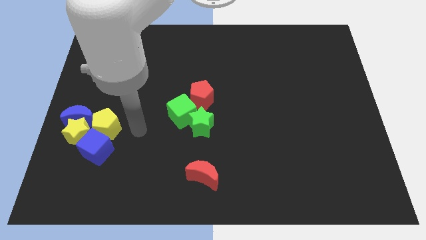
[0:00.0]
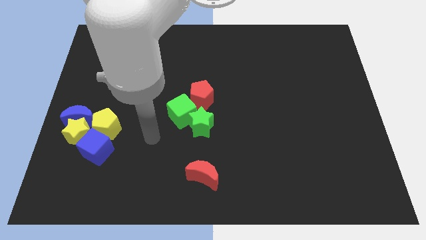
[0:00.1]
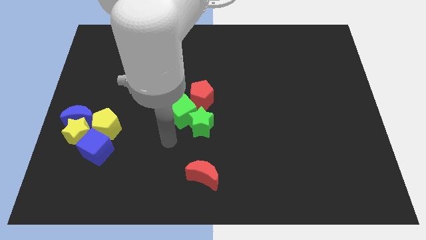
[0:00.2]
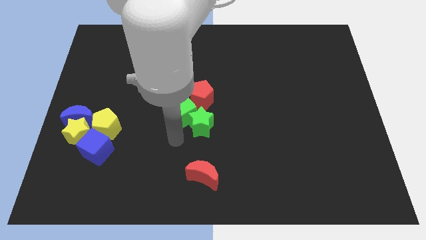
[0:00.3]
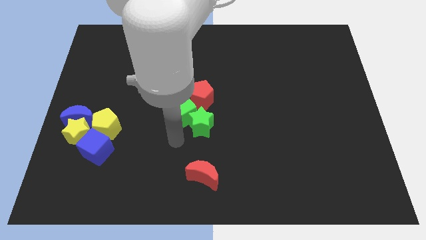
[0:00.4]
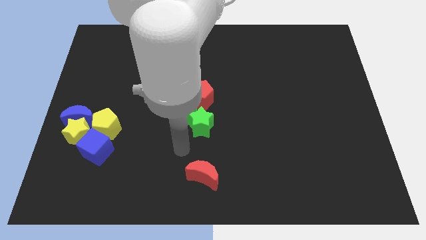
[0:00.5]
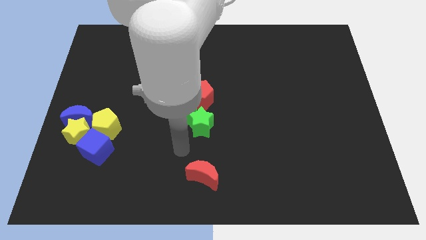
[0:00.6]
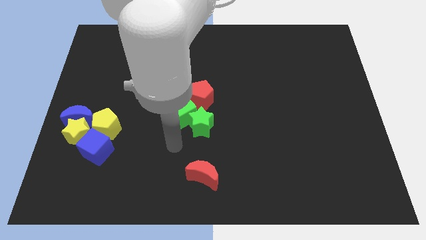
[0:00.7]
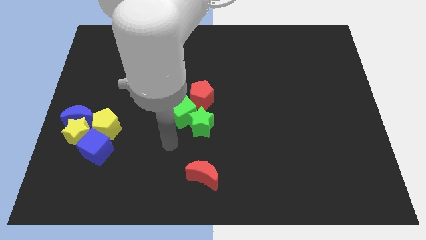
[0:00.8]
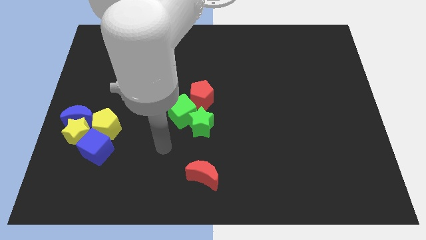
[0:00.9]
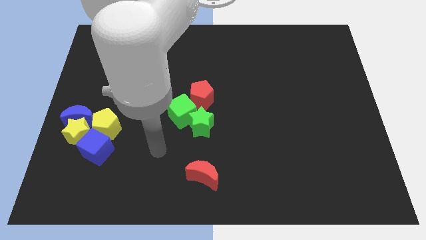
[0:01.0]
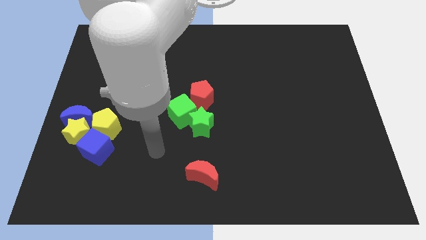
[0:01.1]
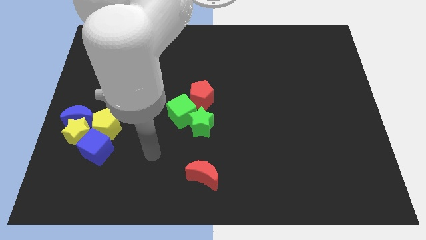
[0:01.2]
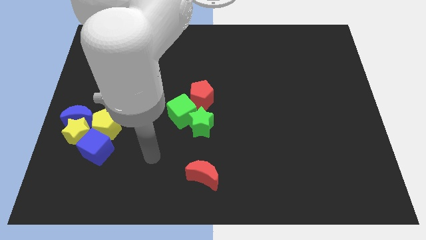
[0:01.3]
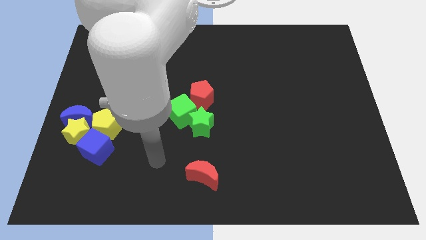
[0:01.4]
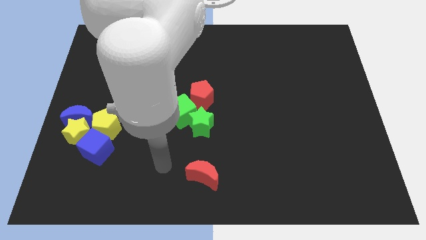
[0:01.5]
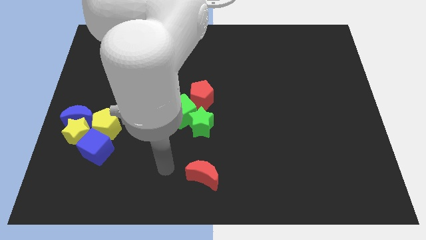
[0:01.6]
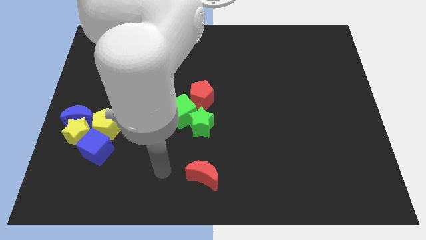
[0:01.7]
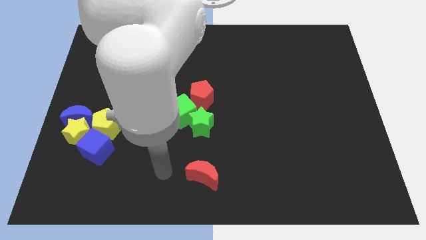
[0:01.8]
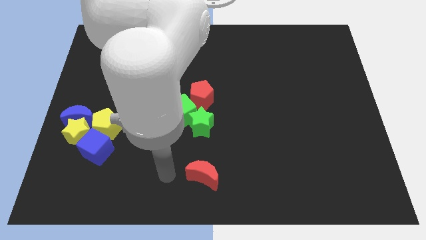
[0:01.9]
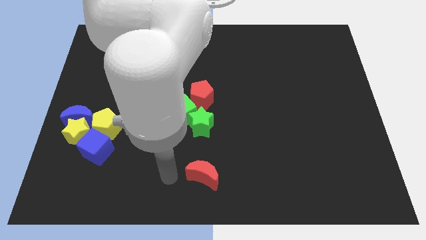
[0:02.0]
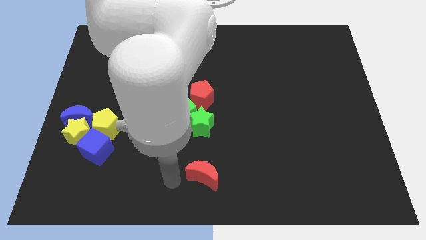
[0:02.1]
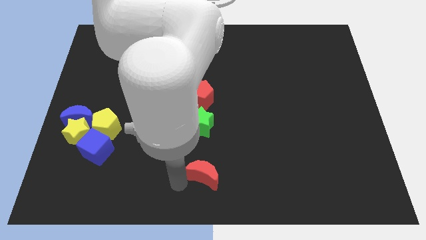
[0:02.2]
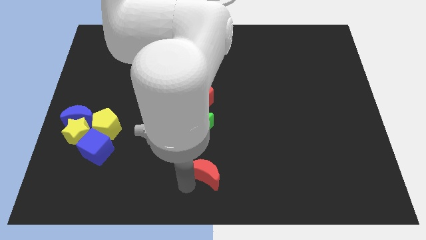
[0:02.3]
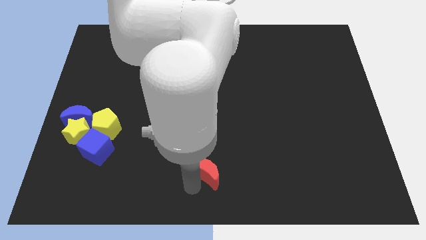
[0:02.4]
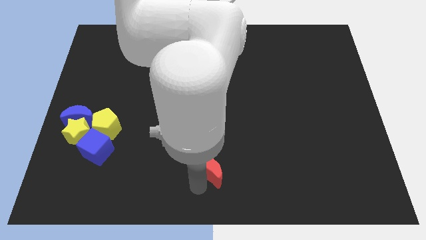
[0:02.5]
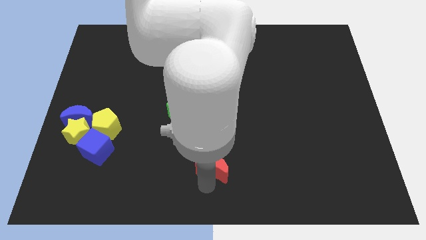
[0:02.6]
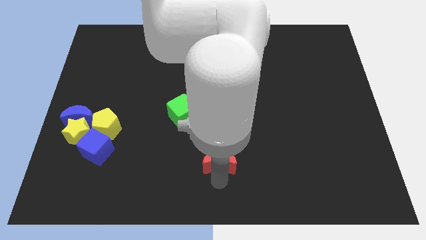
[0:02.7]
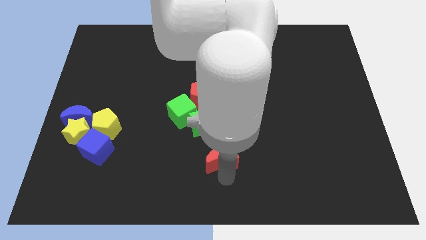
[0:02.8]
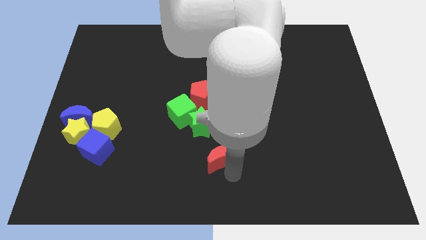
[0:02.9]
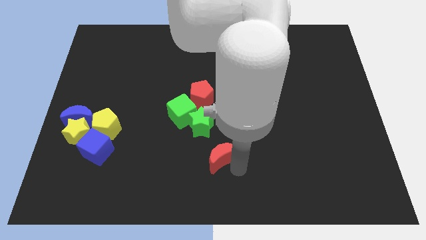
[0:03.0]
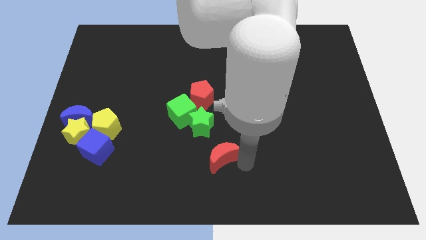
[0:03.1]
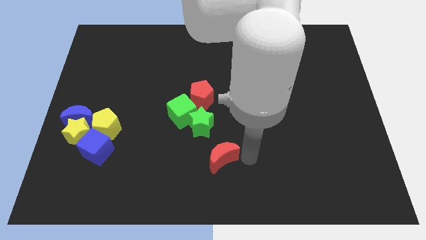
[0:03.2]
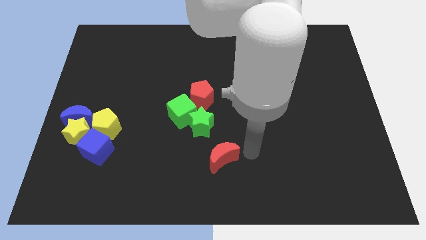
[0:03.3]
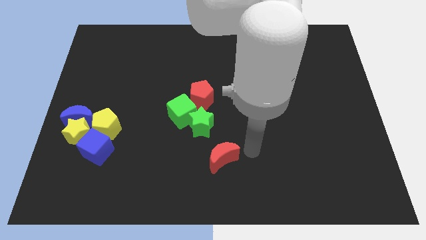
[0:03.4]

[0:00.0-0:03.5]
slide the red moon diagonally on the bottom right side of the green star

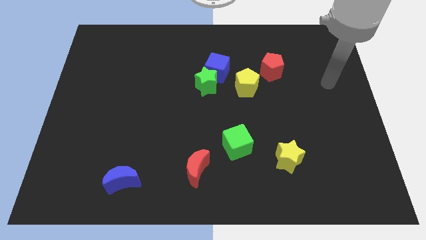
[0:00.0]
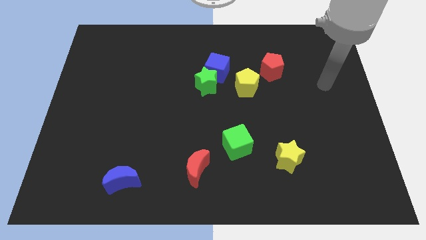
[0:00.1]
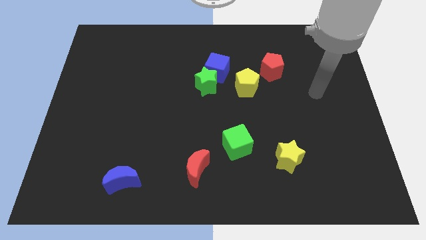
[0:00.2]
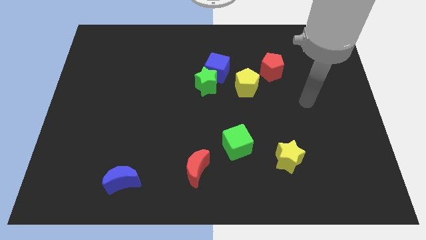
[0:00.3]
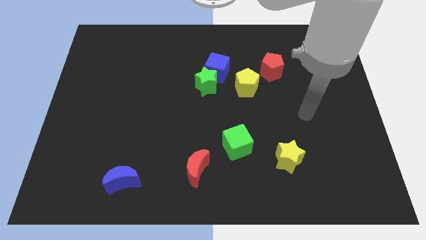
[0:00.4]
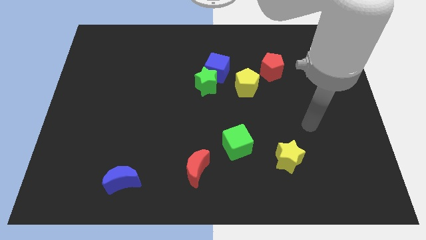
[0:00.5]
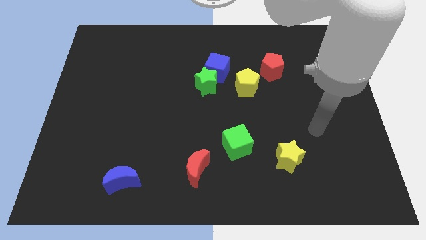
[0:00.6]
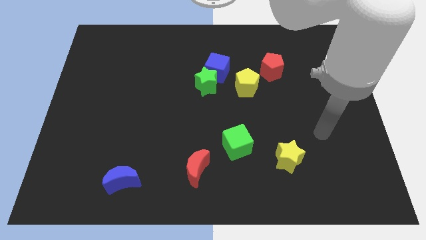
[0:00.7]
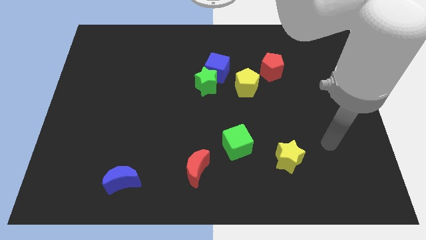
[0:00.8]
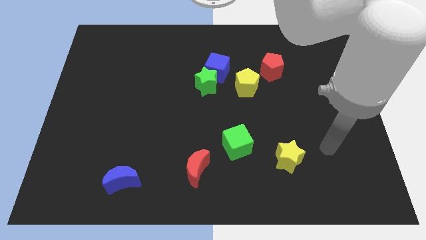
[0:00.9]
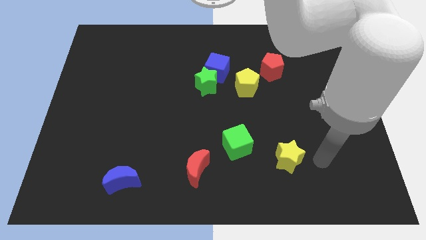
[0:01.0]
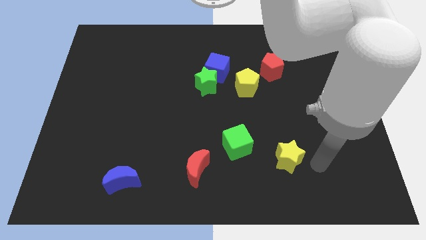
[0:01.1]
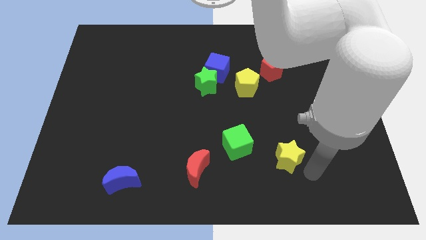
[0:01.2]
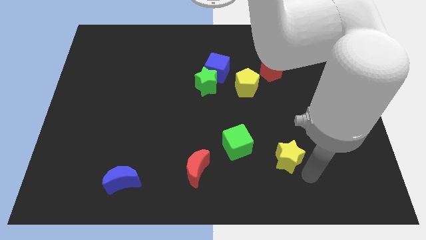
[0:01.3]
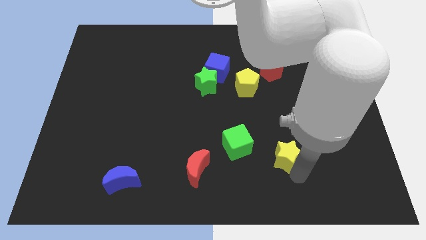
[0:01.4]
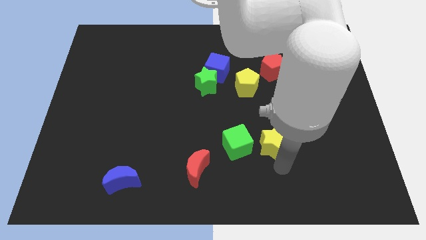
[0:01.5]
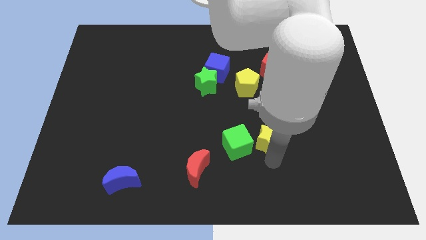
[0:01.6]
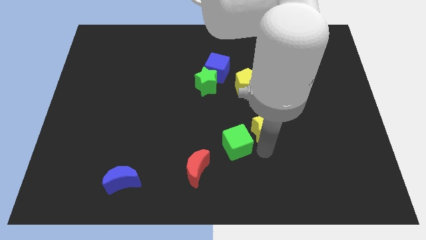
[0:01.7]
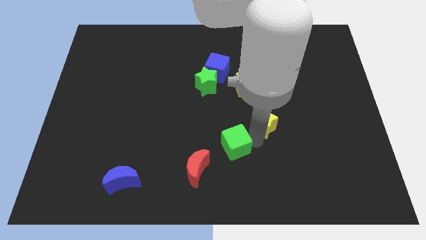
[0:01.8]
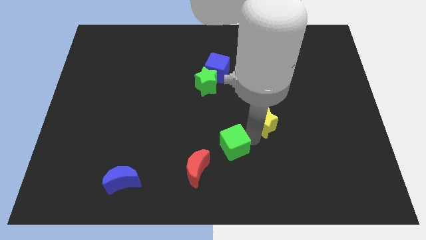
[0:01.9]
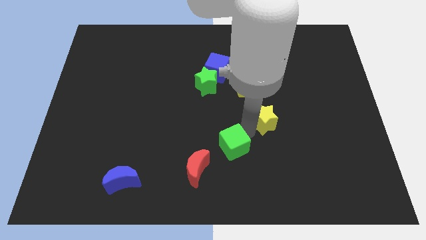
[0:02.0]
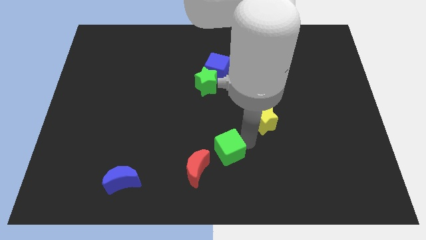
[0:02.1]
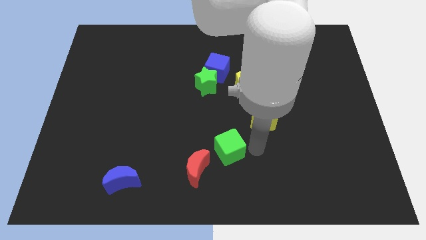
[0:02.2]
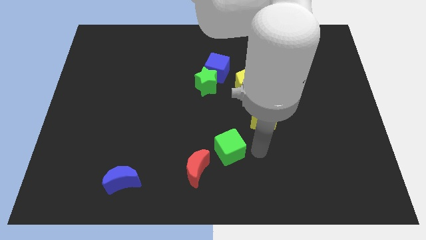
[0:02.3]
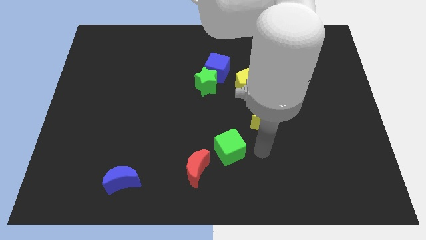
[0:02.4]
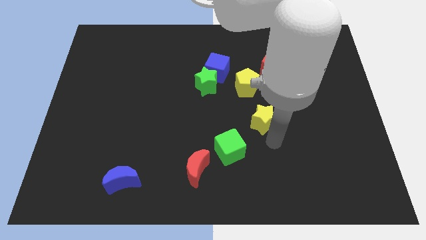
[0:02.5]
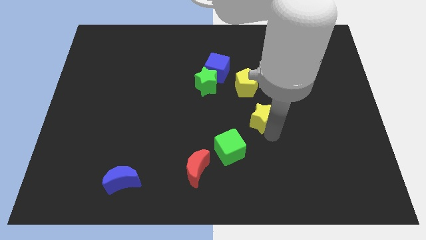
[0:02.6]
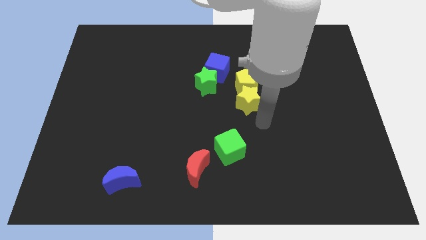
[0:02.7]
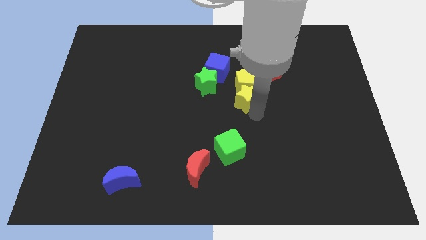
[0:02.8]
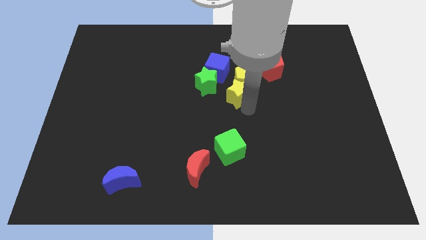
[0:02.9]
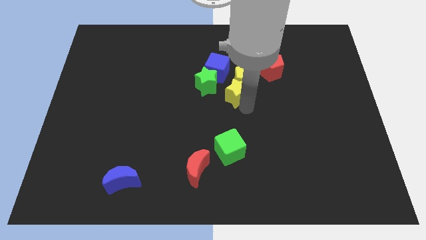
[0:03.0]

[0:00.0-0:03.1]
move the yellow star into the bottom side of the yellow pentagon

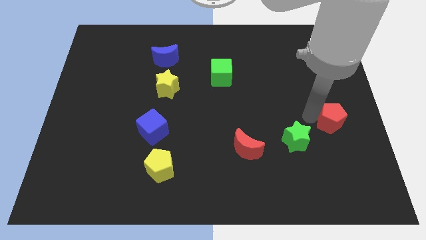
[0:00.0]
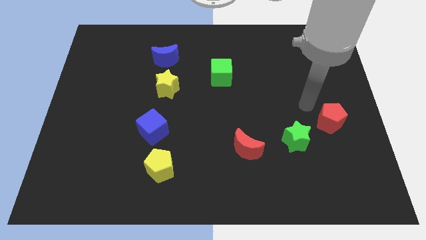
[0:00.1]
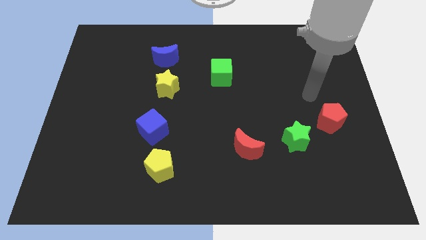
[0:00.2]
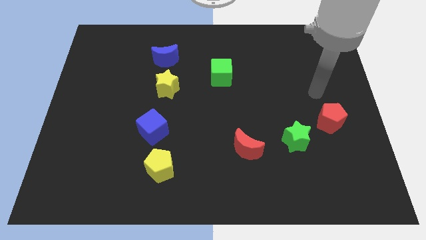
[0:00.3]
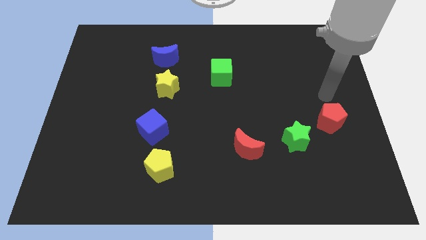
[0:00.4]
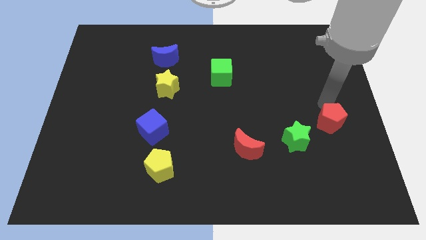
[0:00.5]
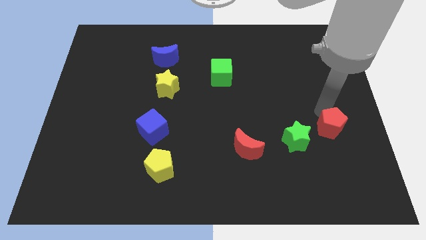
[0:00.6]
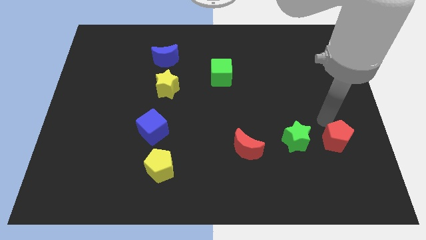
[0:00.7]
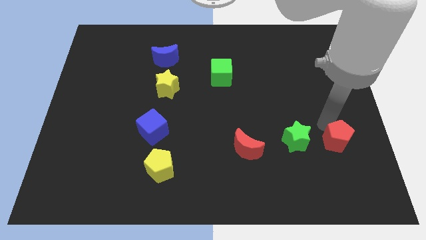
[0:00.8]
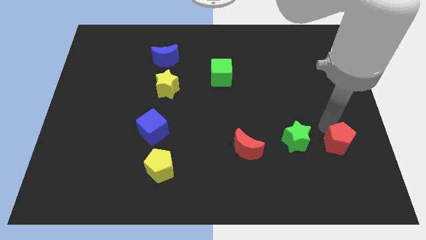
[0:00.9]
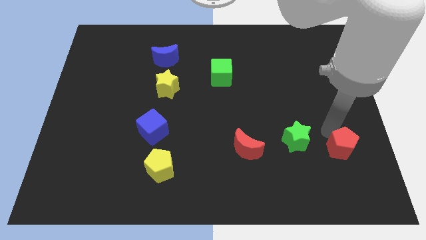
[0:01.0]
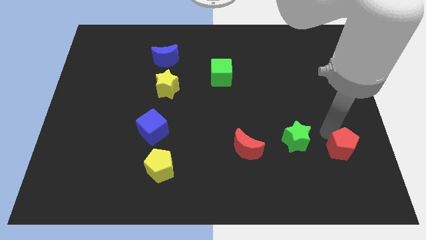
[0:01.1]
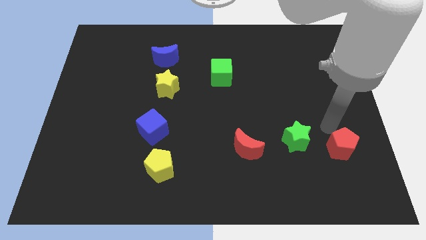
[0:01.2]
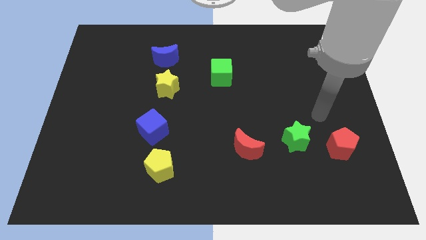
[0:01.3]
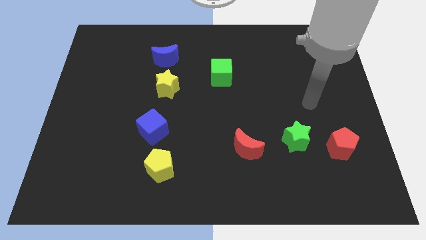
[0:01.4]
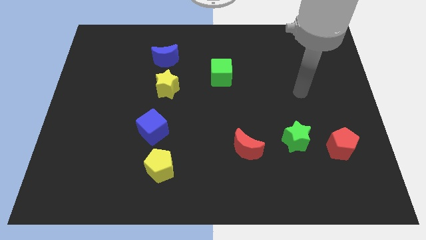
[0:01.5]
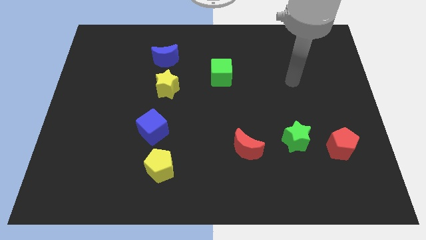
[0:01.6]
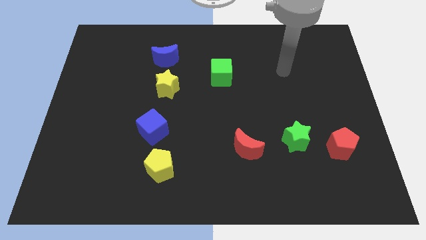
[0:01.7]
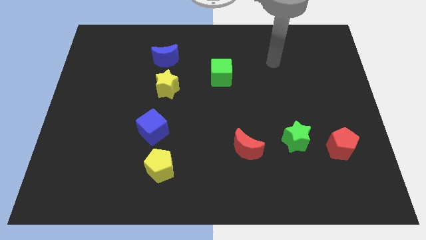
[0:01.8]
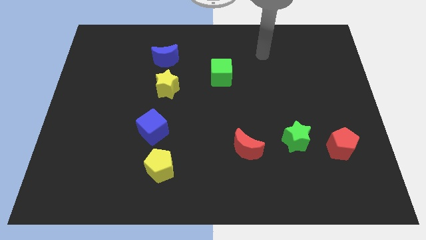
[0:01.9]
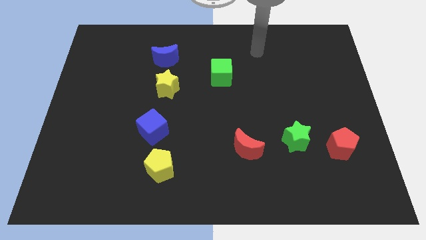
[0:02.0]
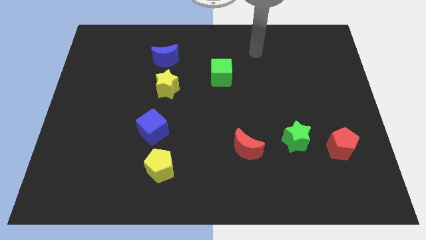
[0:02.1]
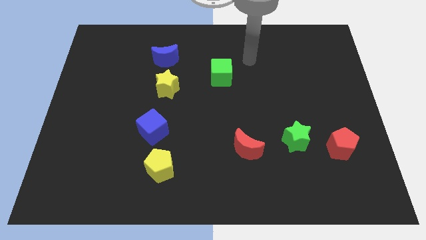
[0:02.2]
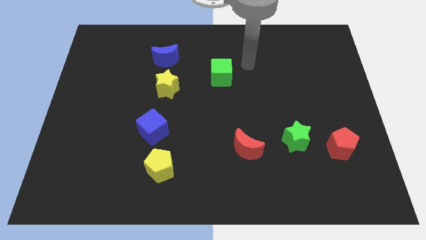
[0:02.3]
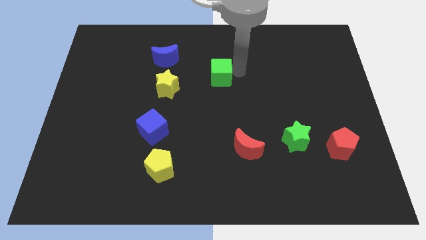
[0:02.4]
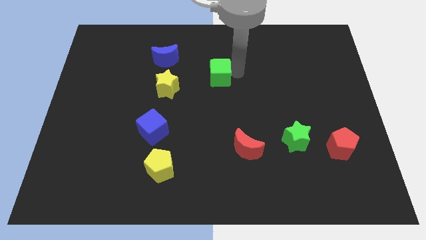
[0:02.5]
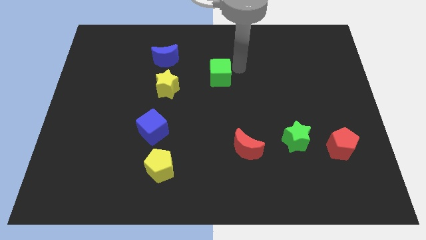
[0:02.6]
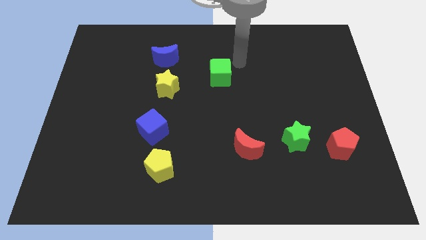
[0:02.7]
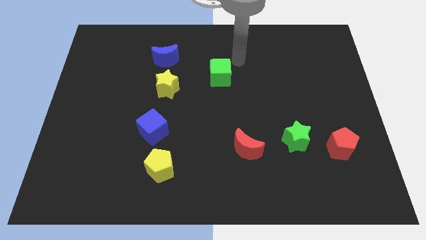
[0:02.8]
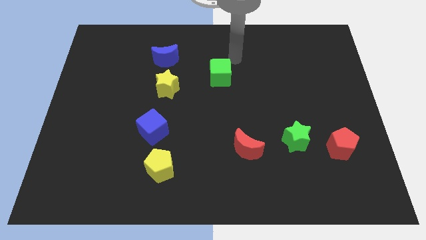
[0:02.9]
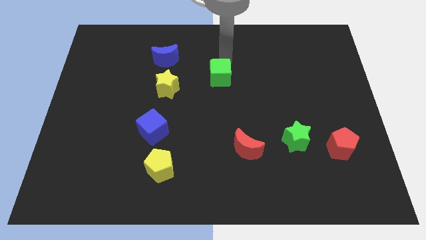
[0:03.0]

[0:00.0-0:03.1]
place your arm above green cube
